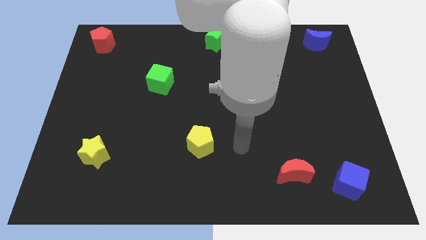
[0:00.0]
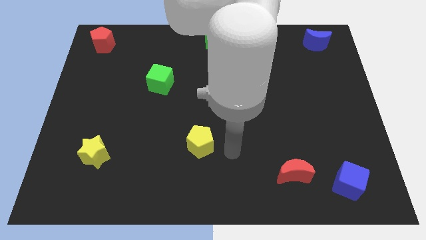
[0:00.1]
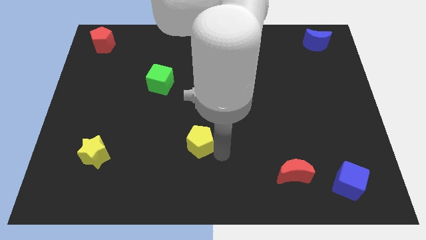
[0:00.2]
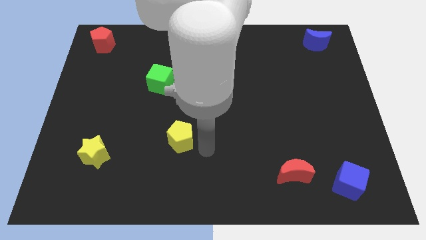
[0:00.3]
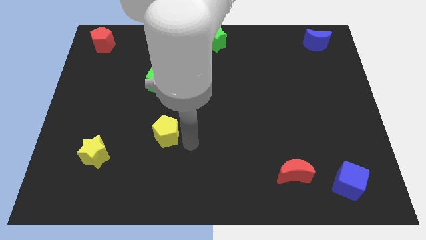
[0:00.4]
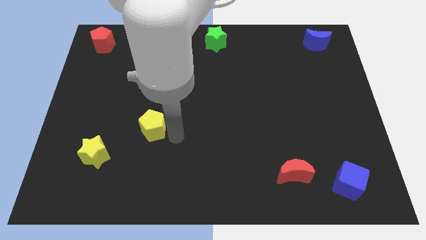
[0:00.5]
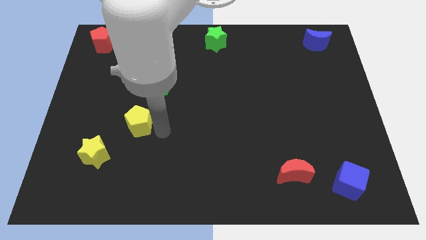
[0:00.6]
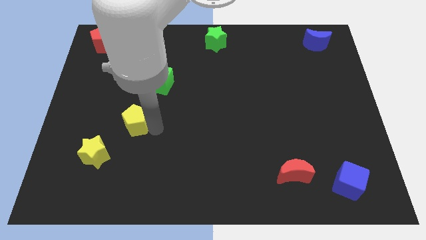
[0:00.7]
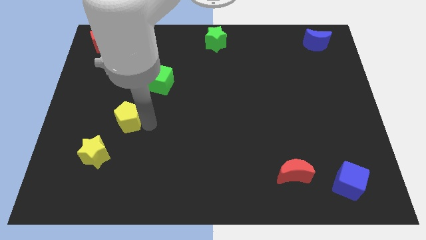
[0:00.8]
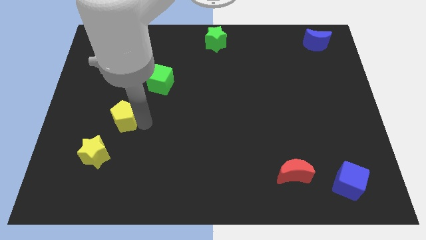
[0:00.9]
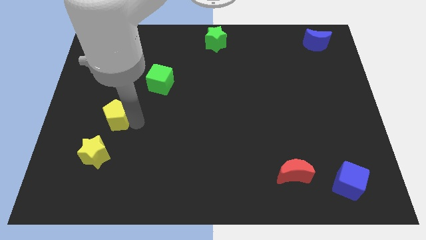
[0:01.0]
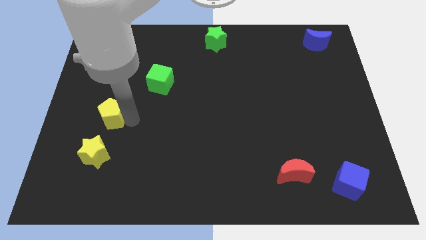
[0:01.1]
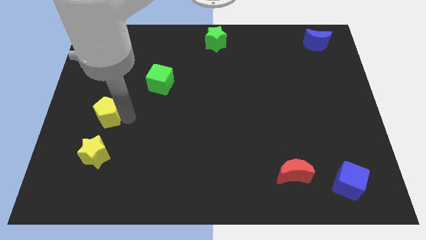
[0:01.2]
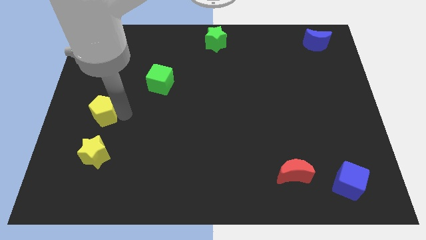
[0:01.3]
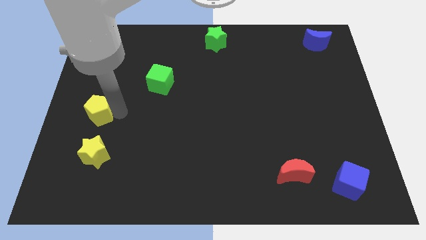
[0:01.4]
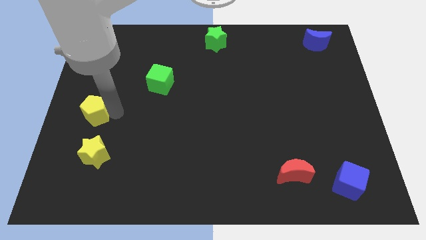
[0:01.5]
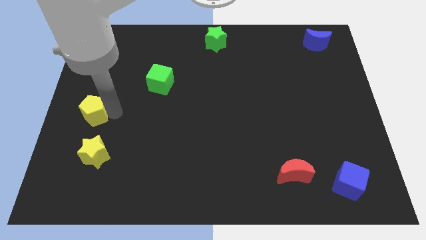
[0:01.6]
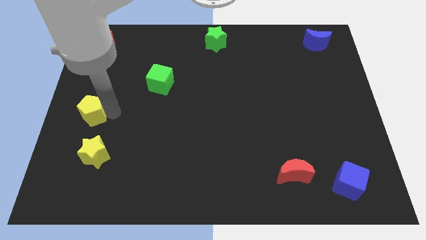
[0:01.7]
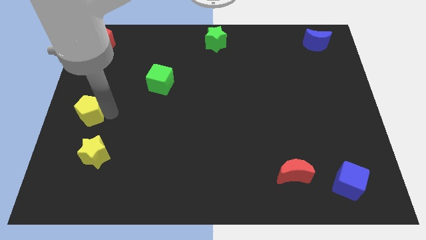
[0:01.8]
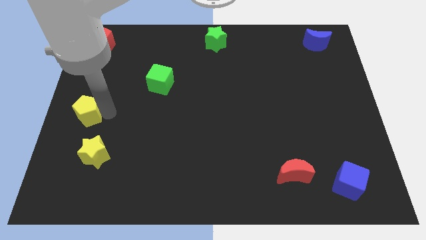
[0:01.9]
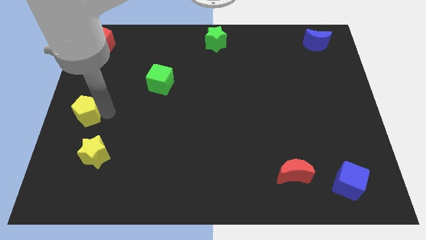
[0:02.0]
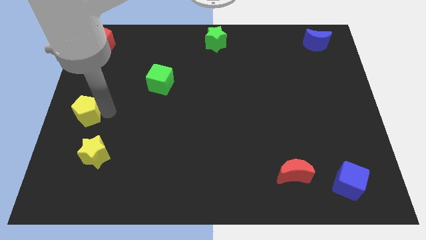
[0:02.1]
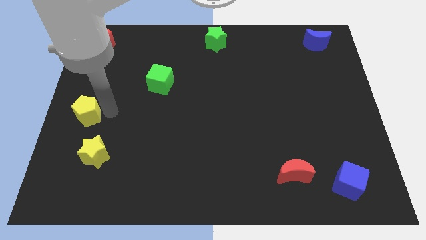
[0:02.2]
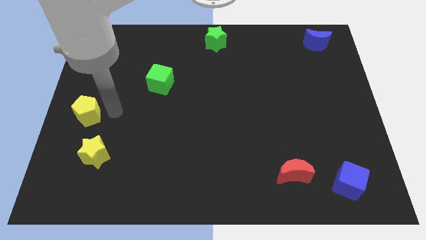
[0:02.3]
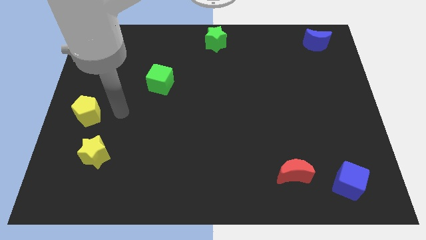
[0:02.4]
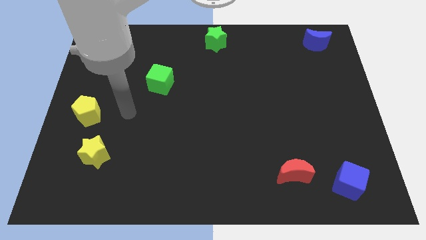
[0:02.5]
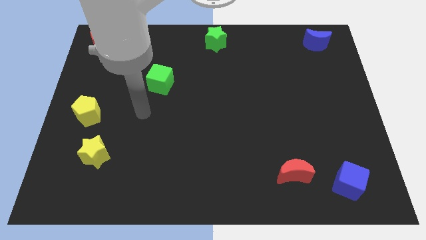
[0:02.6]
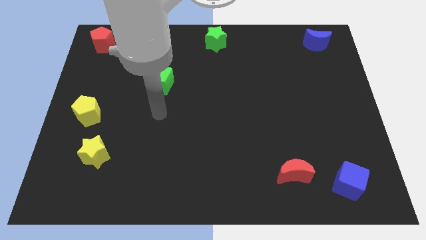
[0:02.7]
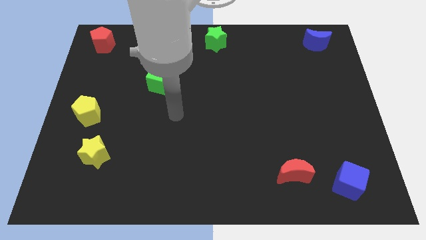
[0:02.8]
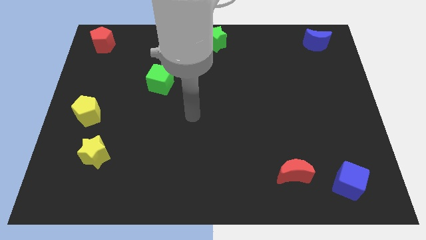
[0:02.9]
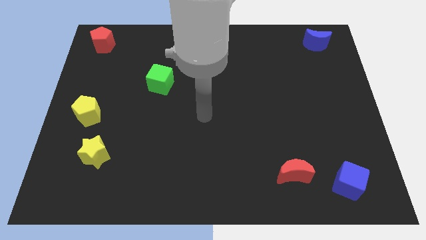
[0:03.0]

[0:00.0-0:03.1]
place yellow pentagon above yellow star

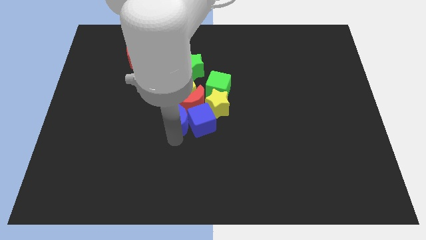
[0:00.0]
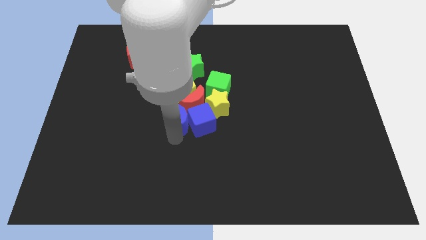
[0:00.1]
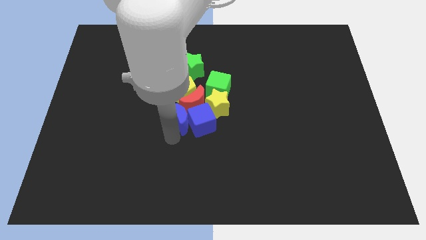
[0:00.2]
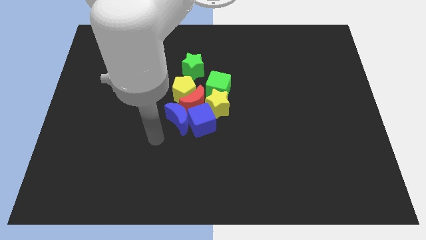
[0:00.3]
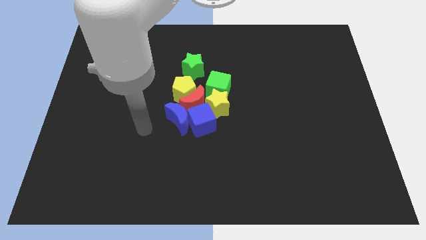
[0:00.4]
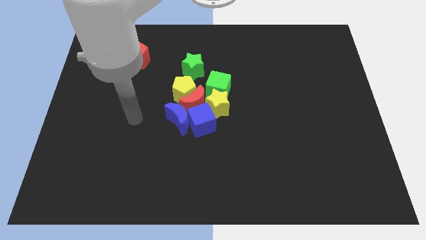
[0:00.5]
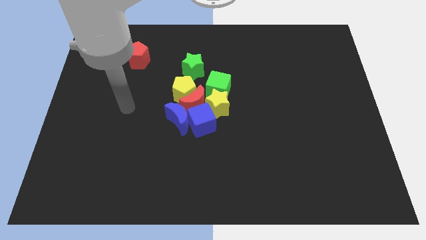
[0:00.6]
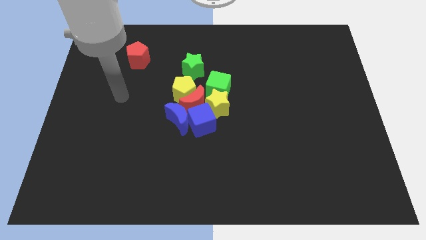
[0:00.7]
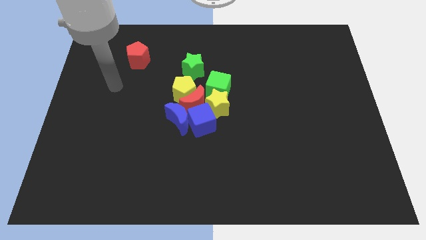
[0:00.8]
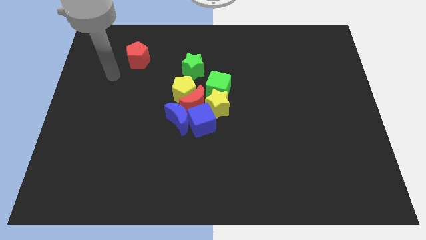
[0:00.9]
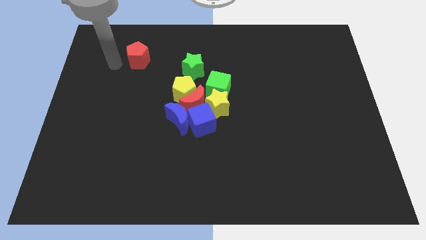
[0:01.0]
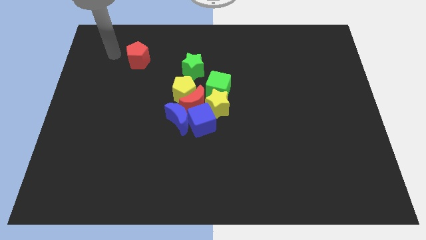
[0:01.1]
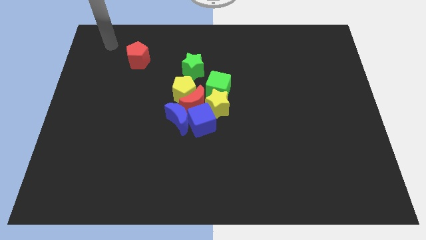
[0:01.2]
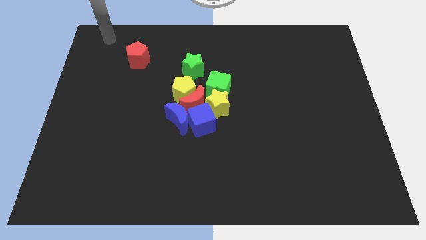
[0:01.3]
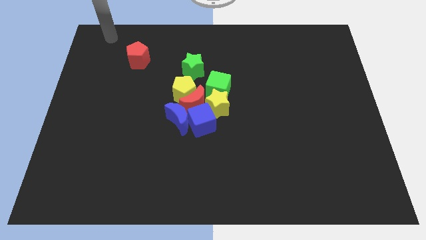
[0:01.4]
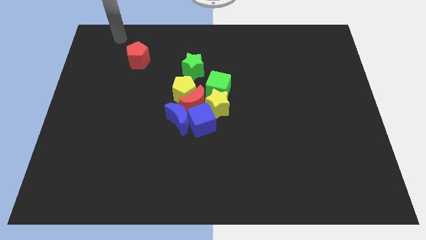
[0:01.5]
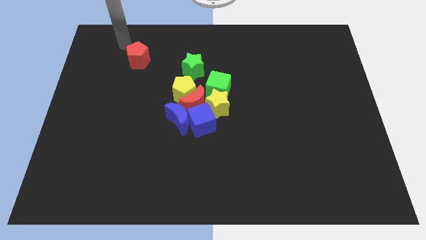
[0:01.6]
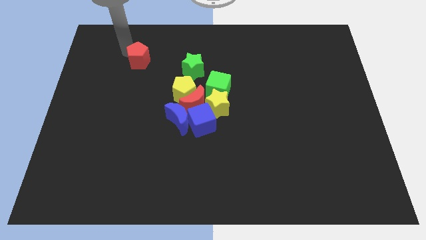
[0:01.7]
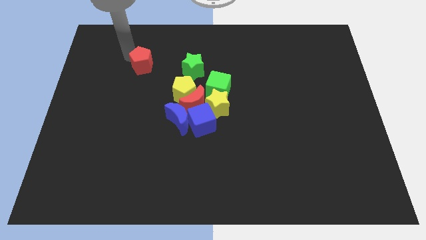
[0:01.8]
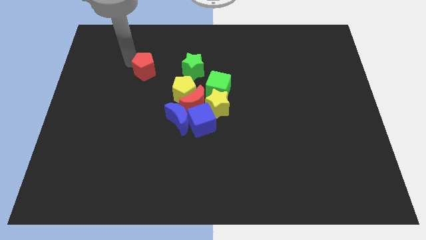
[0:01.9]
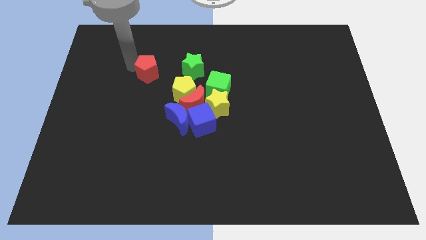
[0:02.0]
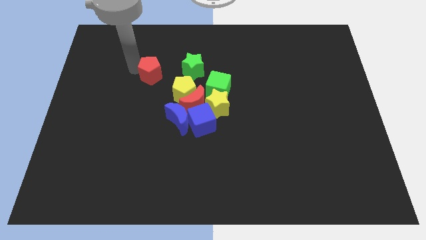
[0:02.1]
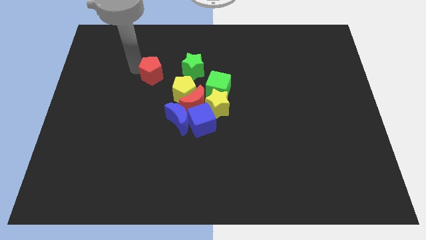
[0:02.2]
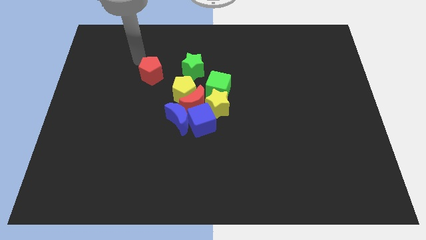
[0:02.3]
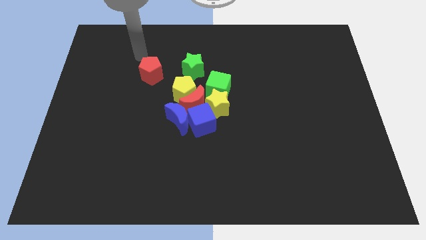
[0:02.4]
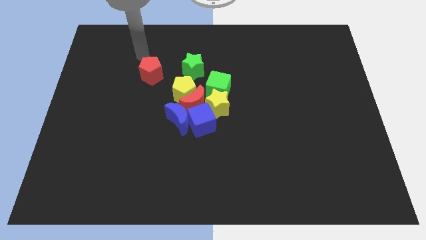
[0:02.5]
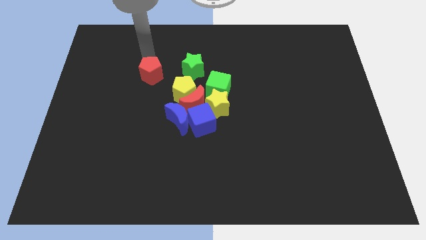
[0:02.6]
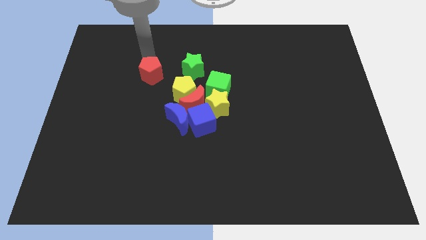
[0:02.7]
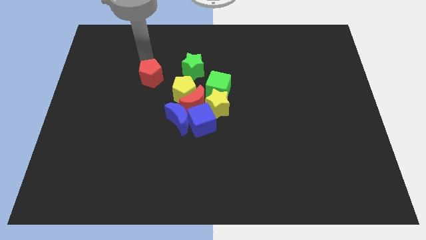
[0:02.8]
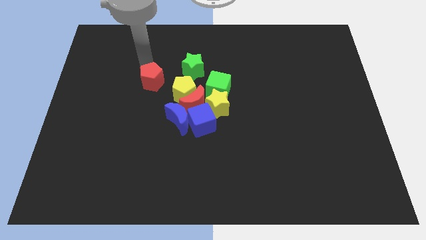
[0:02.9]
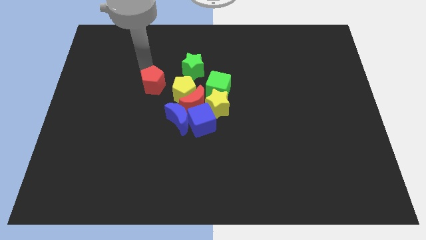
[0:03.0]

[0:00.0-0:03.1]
slide the red pentagon towards the yellow pentagon

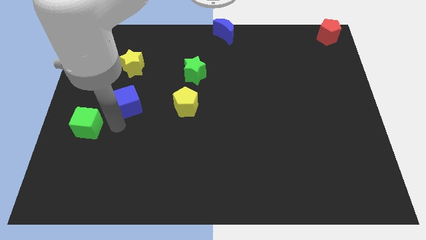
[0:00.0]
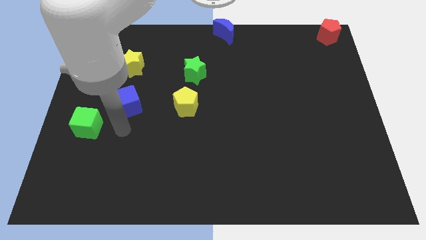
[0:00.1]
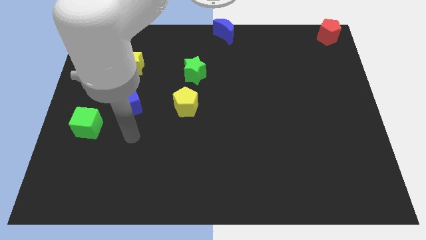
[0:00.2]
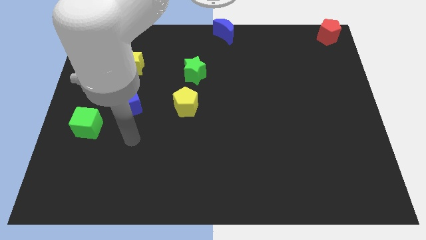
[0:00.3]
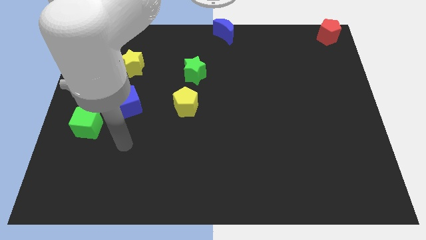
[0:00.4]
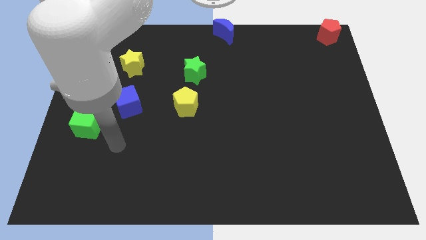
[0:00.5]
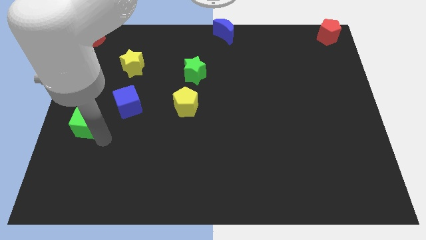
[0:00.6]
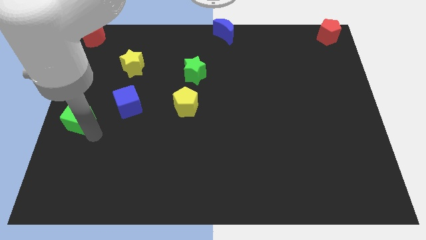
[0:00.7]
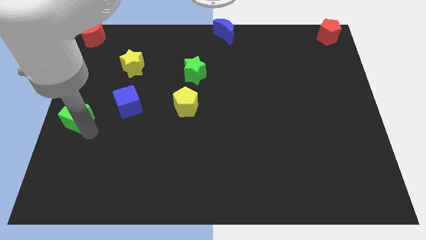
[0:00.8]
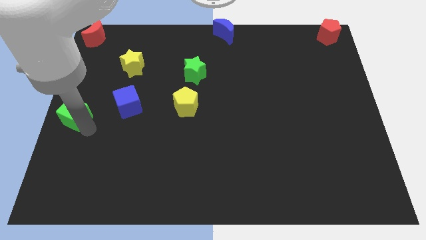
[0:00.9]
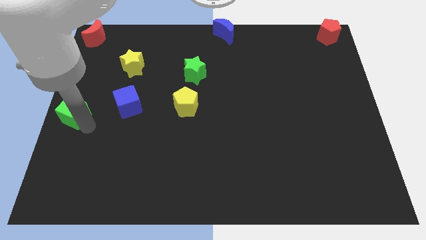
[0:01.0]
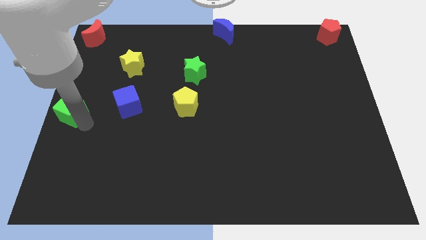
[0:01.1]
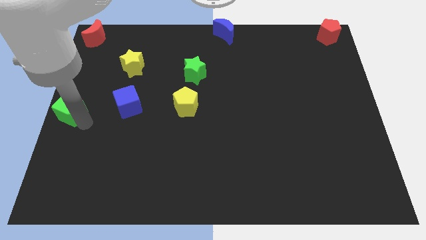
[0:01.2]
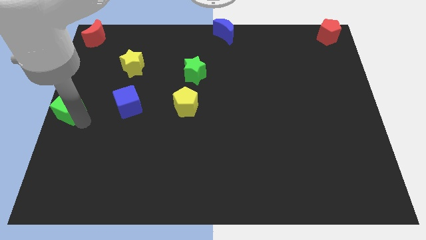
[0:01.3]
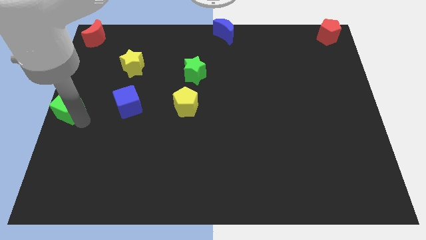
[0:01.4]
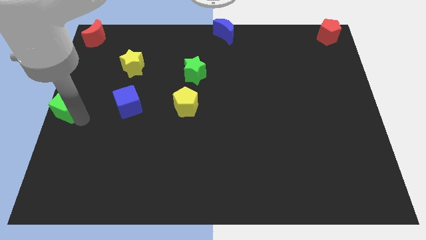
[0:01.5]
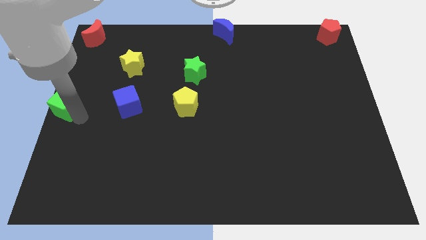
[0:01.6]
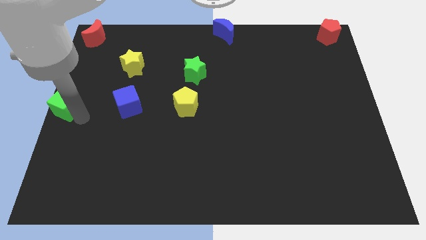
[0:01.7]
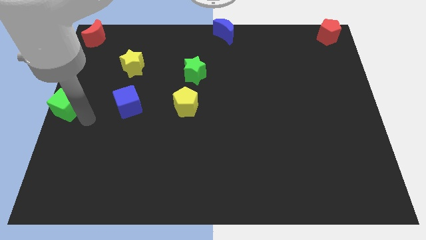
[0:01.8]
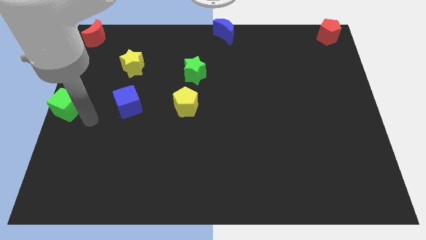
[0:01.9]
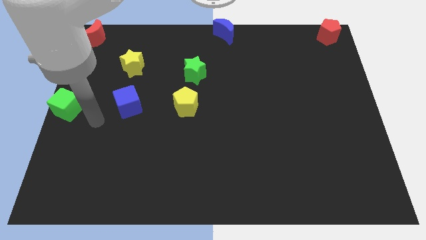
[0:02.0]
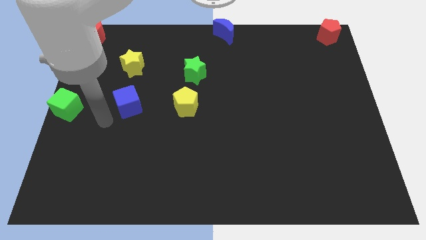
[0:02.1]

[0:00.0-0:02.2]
push the green cube towards the center left

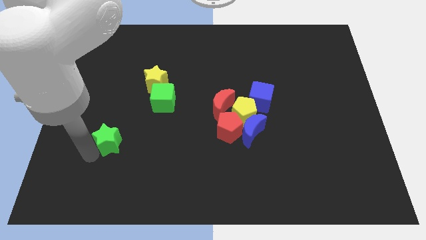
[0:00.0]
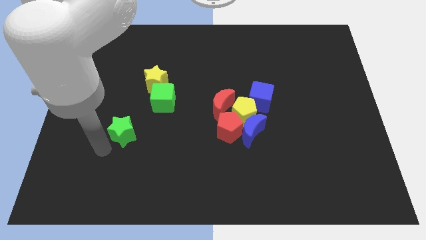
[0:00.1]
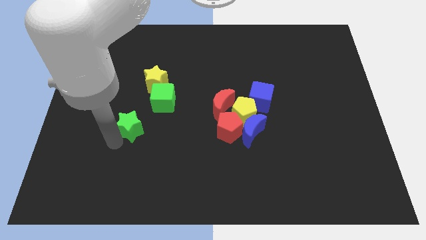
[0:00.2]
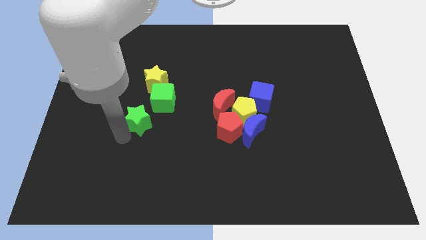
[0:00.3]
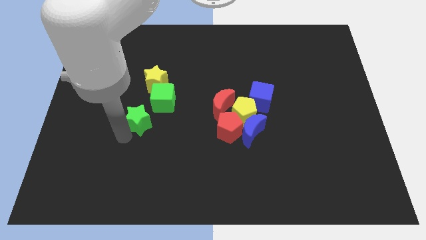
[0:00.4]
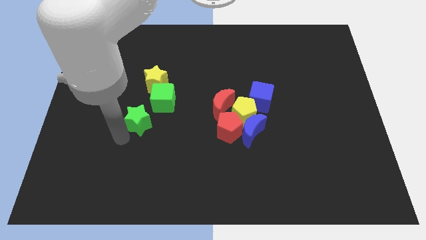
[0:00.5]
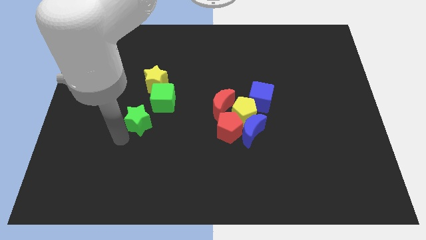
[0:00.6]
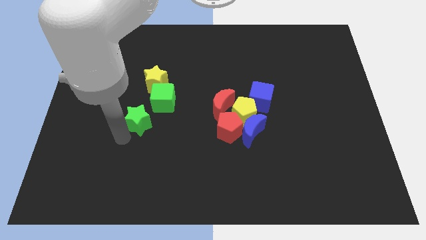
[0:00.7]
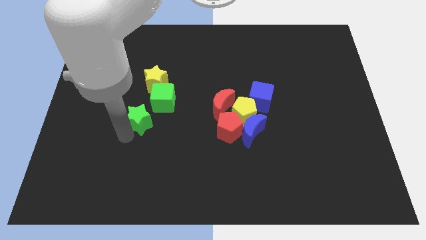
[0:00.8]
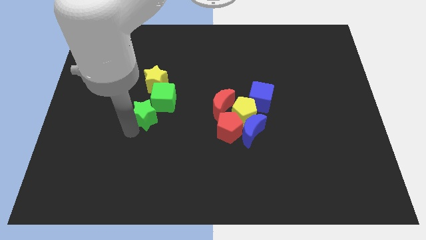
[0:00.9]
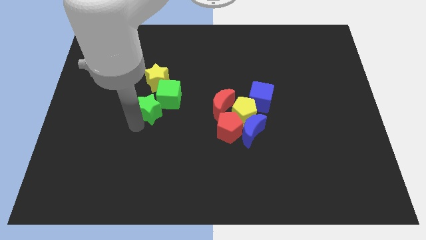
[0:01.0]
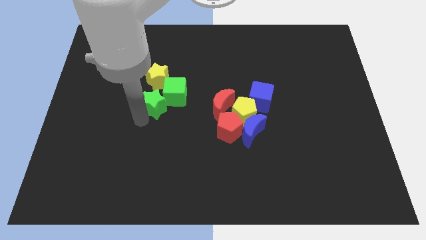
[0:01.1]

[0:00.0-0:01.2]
push the green star into the bottom left of the green cube
